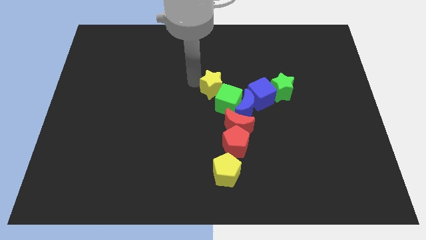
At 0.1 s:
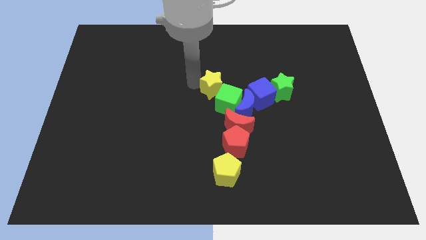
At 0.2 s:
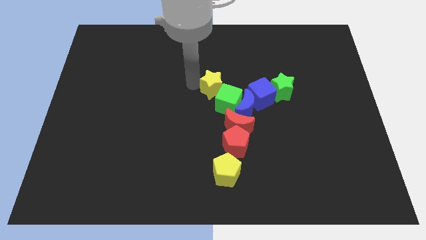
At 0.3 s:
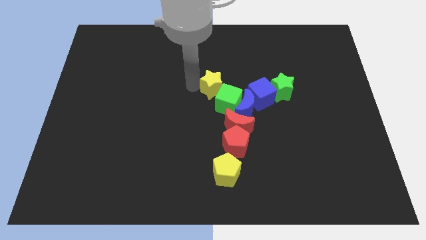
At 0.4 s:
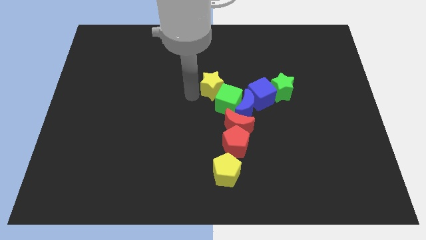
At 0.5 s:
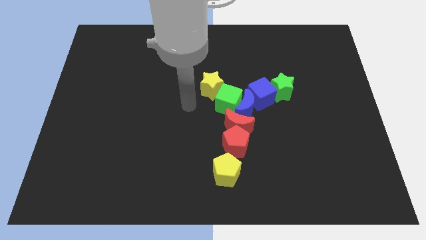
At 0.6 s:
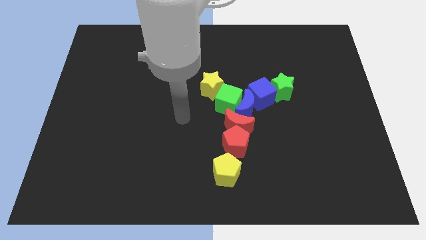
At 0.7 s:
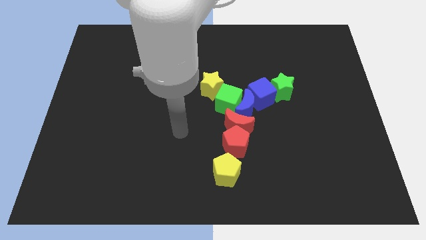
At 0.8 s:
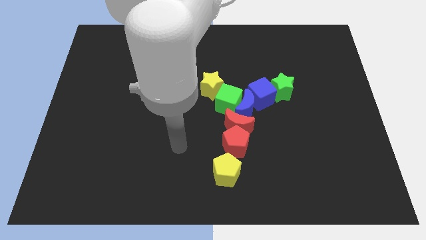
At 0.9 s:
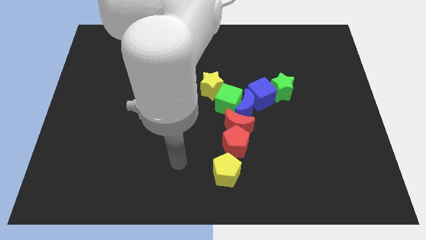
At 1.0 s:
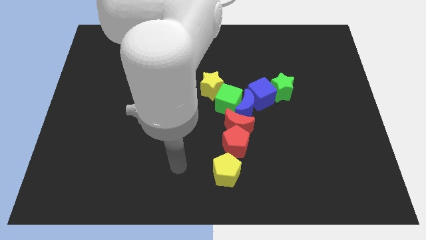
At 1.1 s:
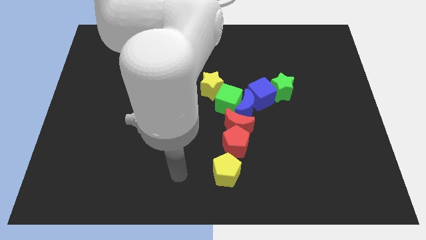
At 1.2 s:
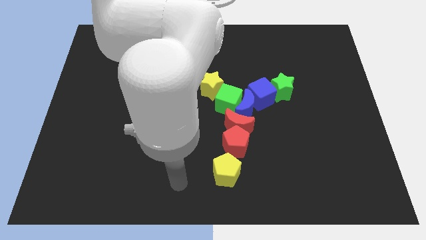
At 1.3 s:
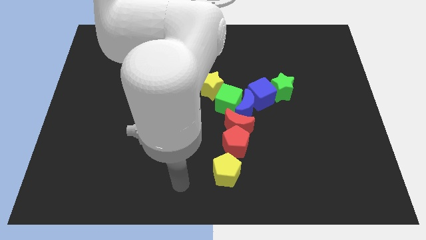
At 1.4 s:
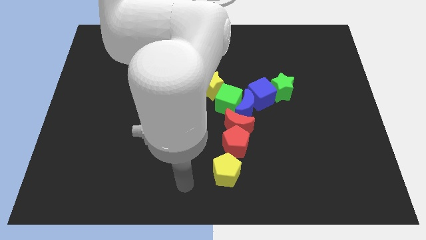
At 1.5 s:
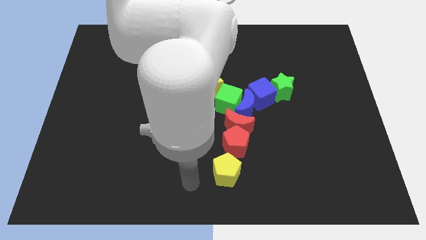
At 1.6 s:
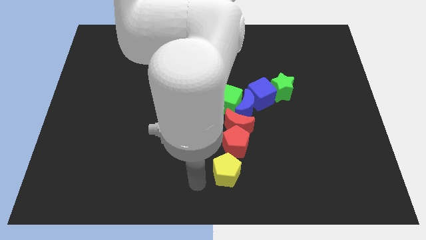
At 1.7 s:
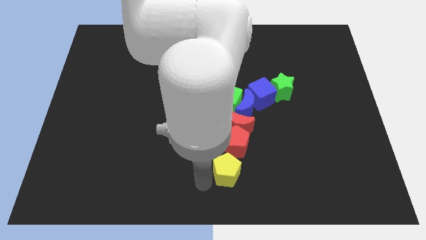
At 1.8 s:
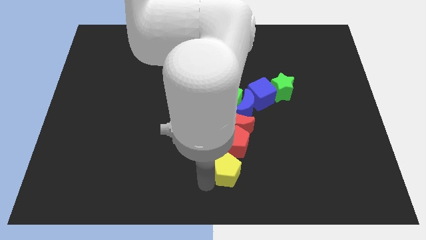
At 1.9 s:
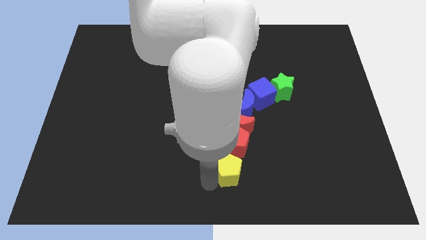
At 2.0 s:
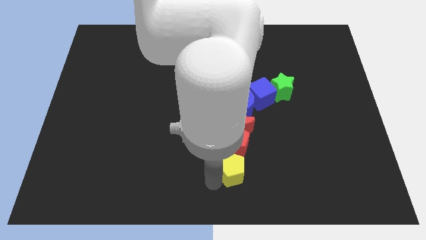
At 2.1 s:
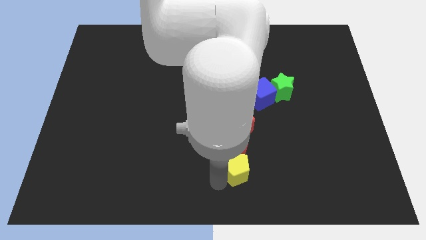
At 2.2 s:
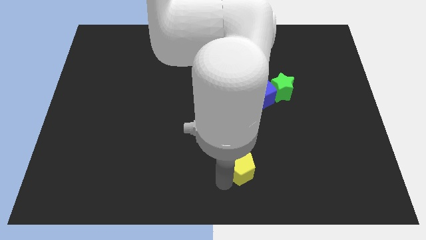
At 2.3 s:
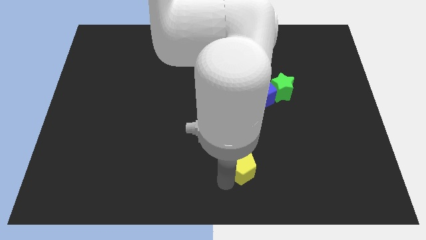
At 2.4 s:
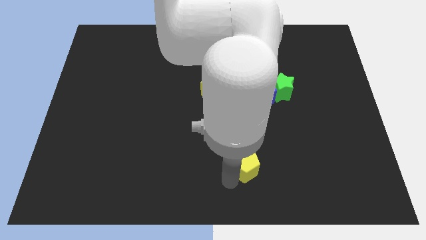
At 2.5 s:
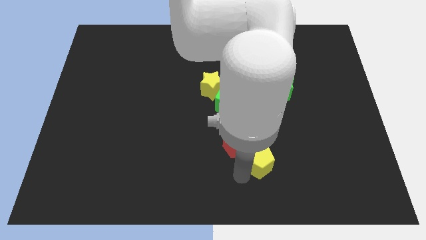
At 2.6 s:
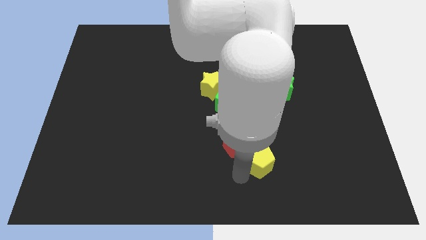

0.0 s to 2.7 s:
move yellow pentagon slightly to the right

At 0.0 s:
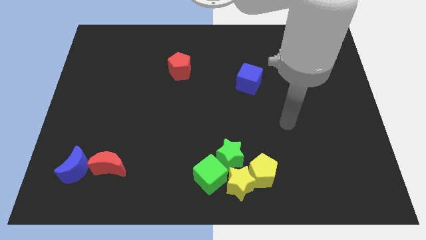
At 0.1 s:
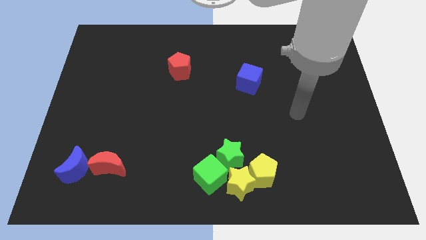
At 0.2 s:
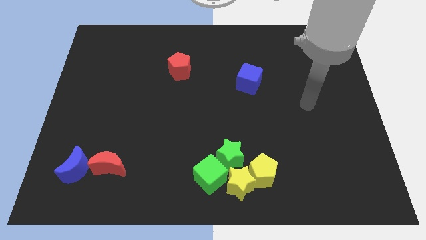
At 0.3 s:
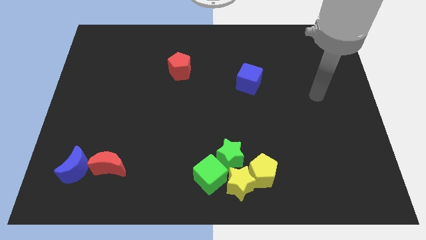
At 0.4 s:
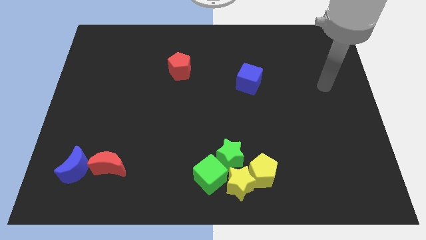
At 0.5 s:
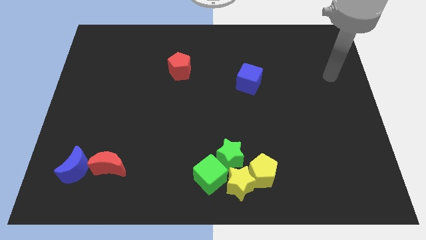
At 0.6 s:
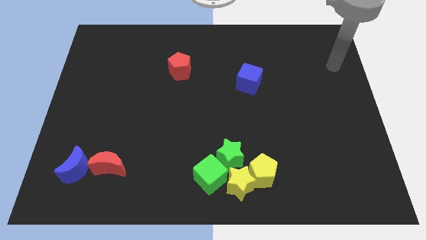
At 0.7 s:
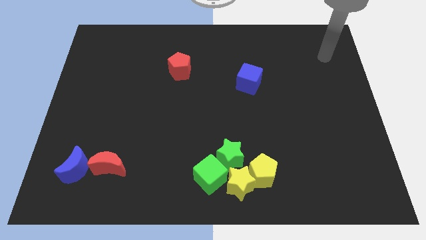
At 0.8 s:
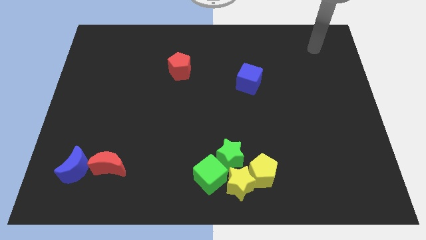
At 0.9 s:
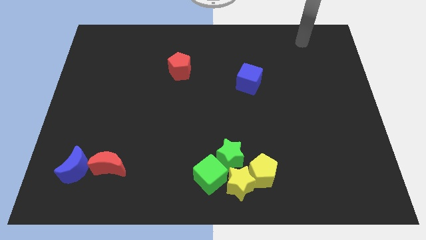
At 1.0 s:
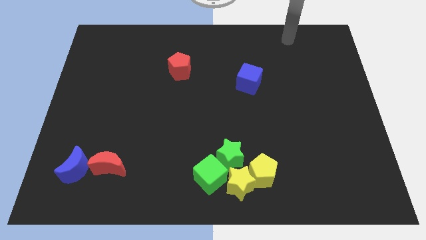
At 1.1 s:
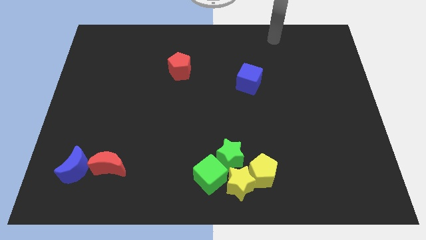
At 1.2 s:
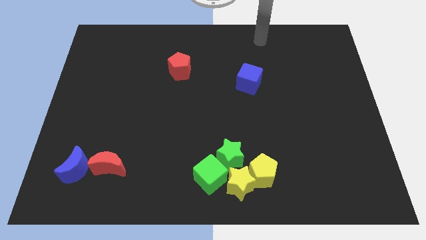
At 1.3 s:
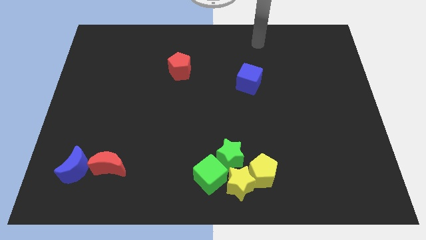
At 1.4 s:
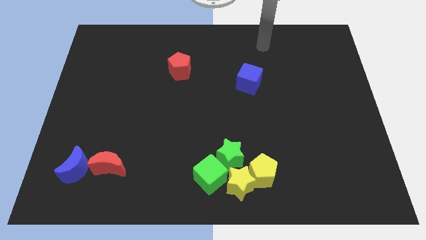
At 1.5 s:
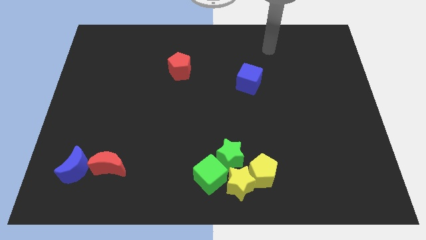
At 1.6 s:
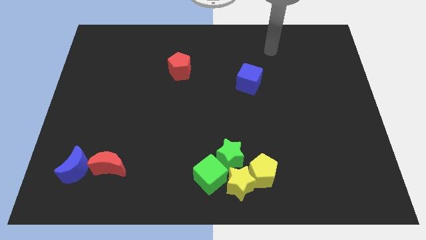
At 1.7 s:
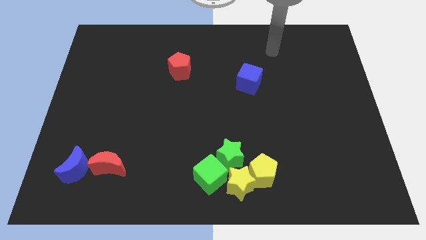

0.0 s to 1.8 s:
move the arm away from the yellow pentagon

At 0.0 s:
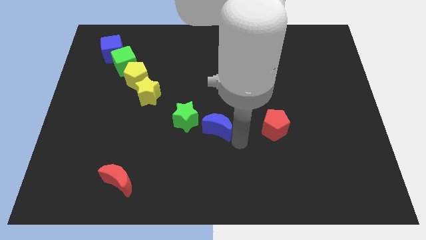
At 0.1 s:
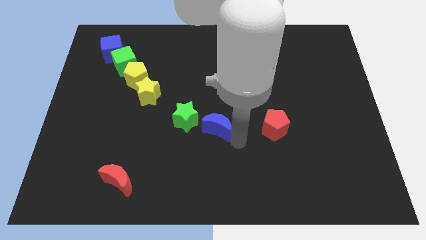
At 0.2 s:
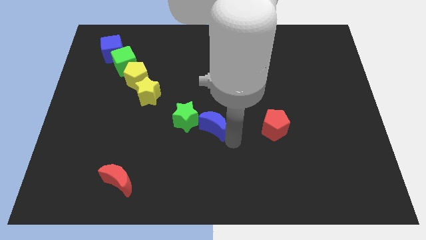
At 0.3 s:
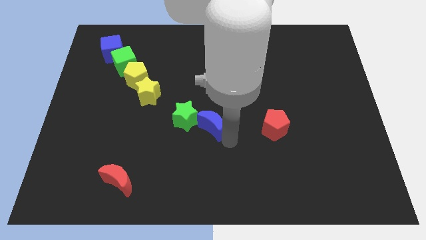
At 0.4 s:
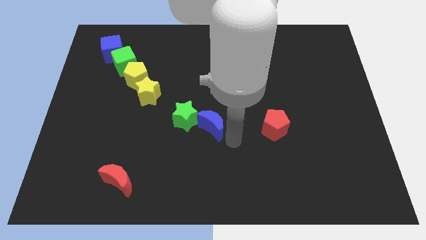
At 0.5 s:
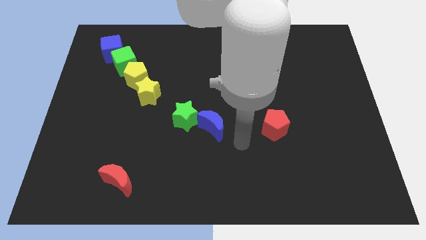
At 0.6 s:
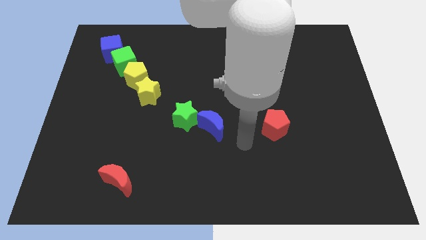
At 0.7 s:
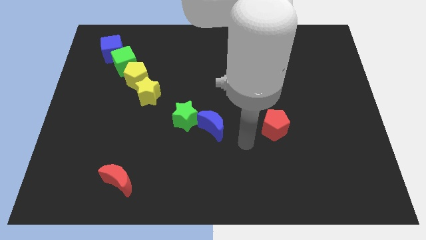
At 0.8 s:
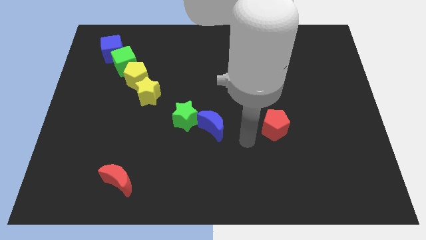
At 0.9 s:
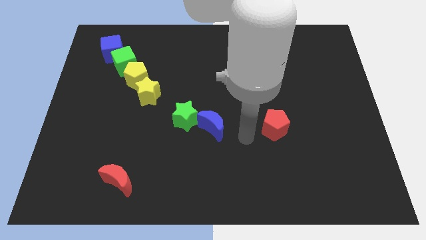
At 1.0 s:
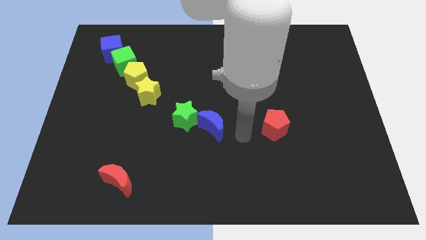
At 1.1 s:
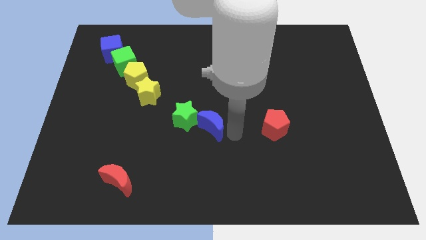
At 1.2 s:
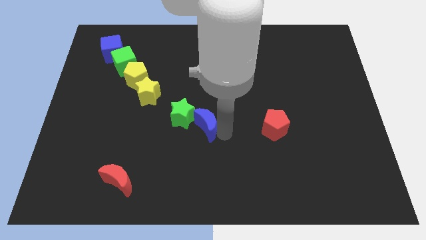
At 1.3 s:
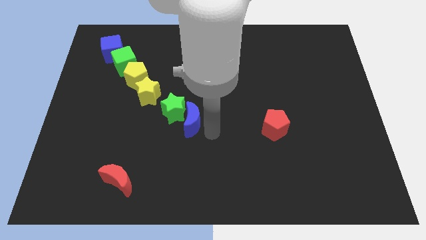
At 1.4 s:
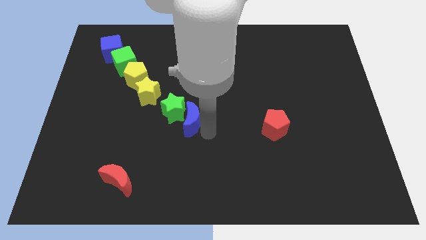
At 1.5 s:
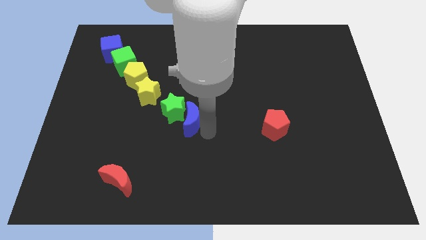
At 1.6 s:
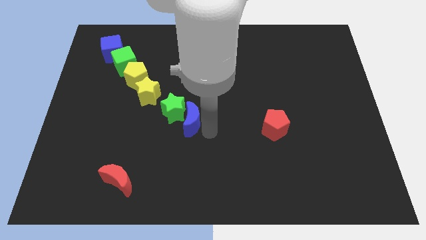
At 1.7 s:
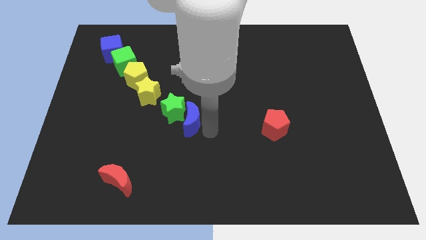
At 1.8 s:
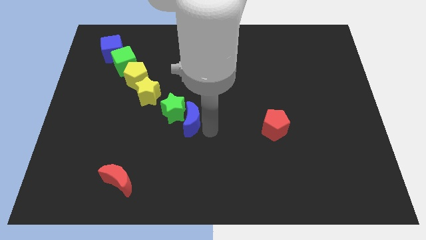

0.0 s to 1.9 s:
push the blue moon into green star

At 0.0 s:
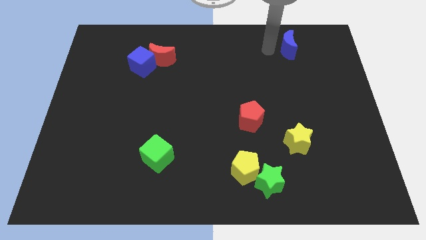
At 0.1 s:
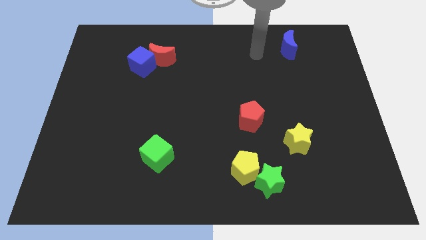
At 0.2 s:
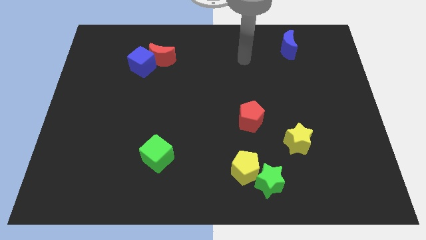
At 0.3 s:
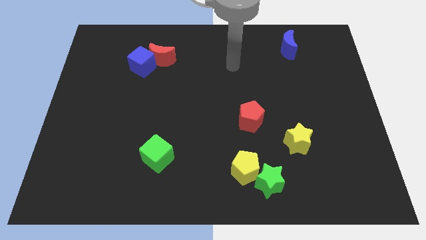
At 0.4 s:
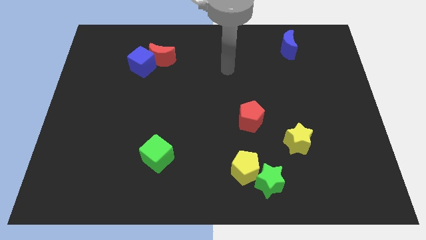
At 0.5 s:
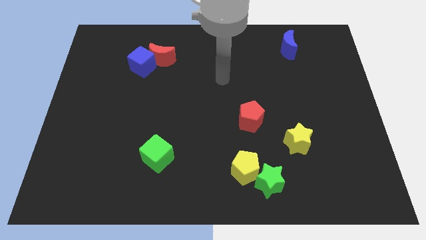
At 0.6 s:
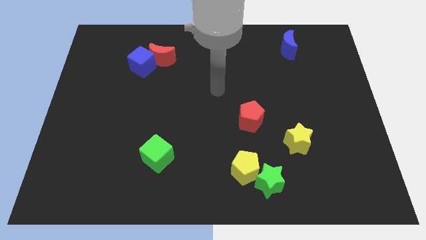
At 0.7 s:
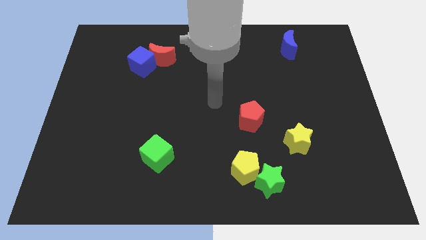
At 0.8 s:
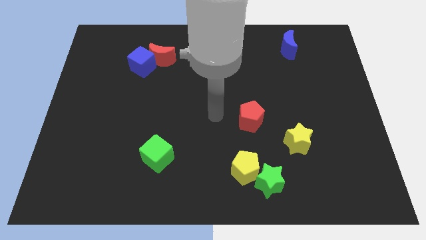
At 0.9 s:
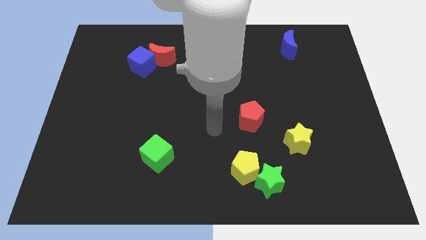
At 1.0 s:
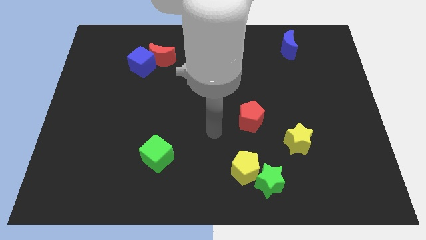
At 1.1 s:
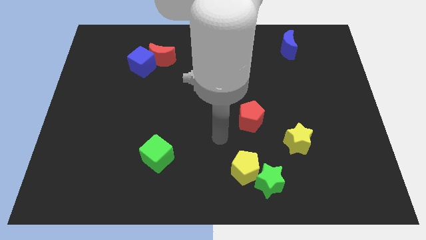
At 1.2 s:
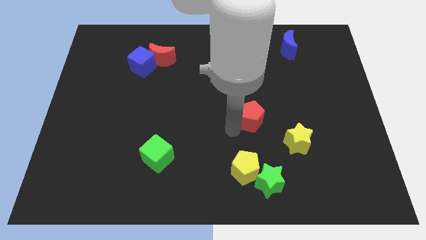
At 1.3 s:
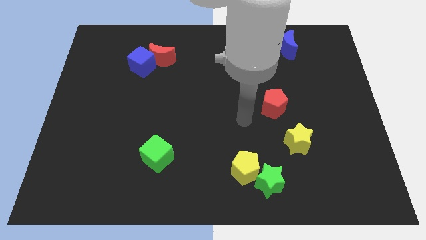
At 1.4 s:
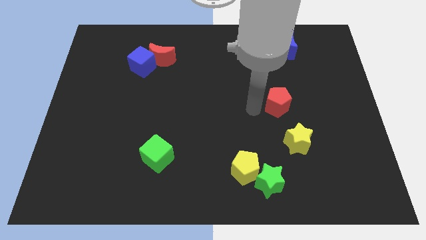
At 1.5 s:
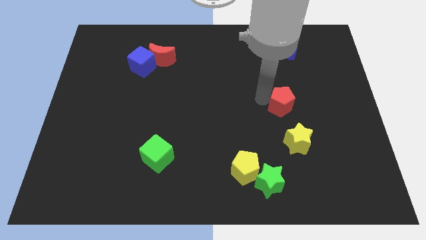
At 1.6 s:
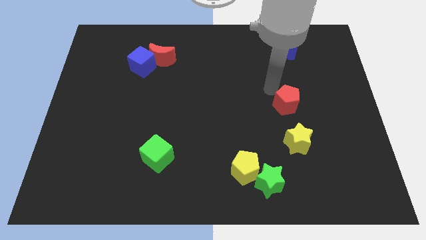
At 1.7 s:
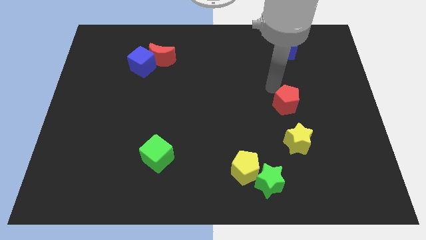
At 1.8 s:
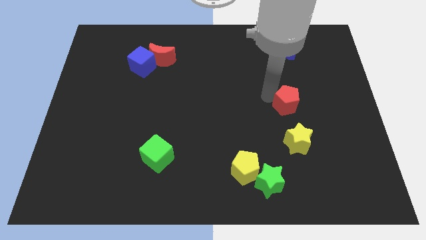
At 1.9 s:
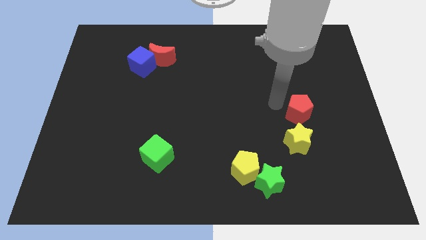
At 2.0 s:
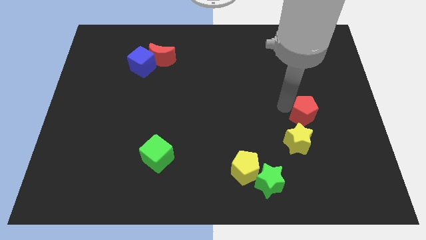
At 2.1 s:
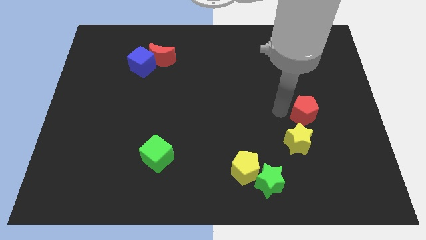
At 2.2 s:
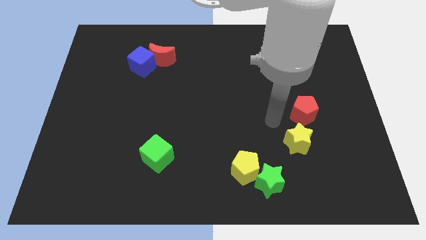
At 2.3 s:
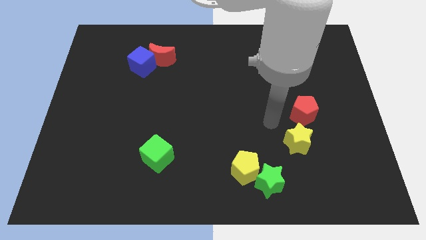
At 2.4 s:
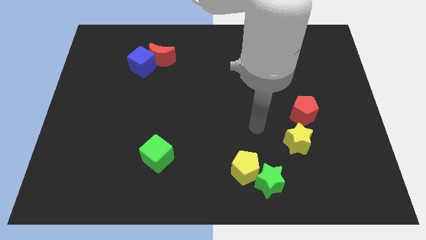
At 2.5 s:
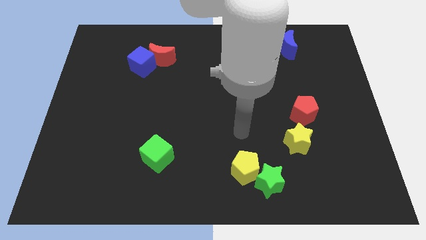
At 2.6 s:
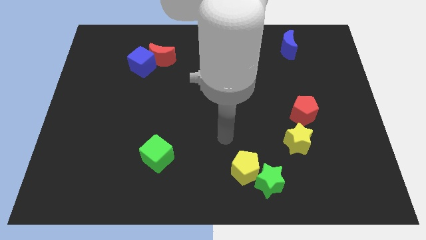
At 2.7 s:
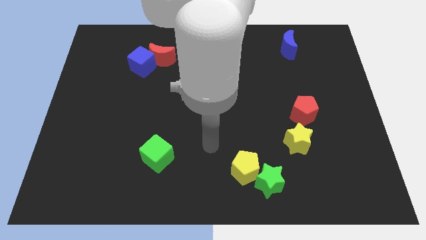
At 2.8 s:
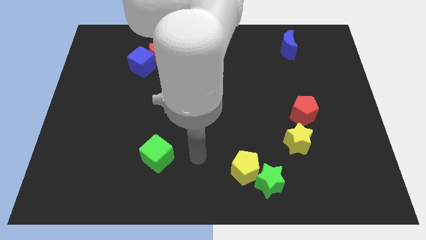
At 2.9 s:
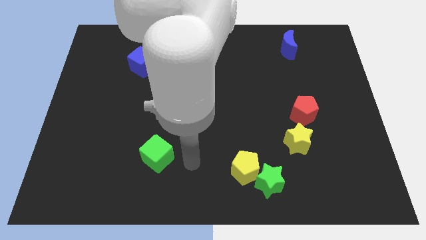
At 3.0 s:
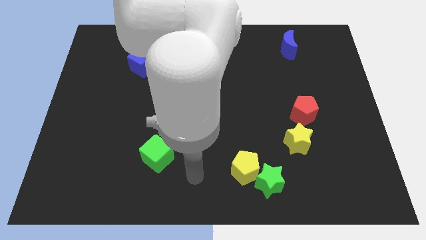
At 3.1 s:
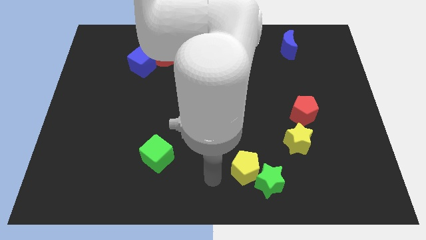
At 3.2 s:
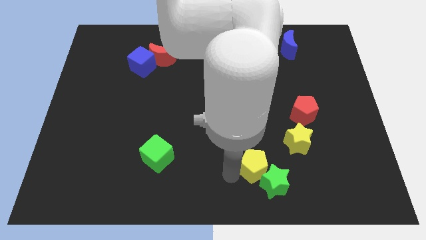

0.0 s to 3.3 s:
place the red pentagon vertically above the yellow star
